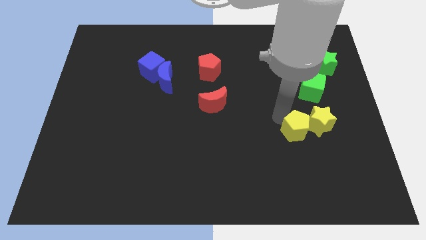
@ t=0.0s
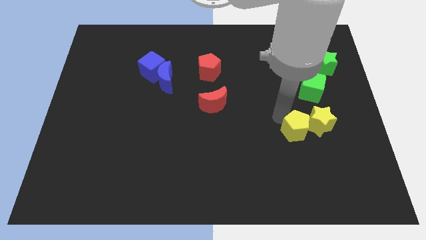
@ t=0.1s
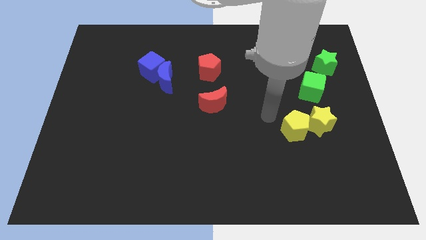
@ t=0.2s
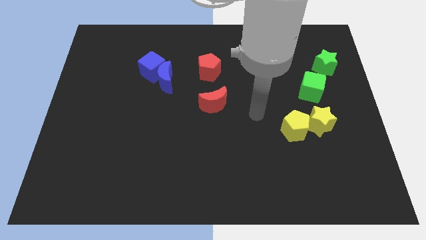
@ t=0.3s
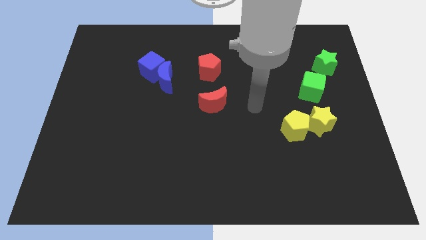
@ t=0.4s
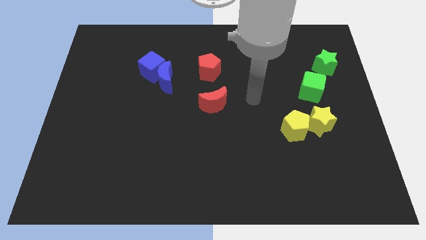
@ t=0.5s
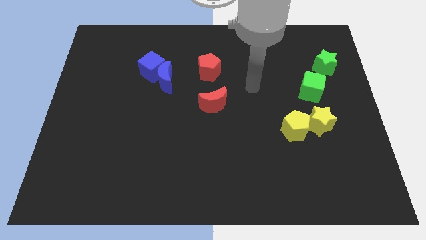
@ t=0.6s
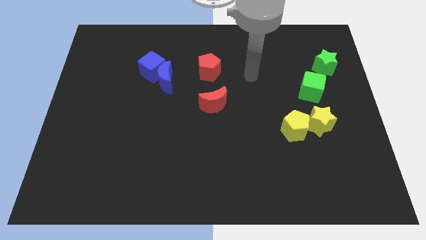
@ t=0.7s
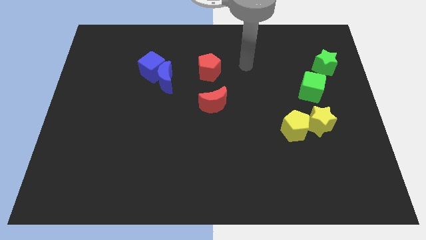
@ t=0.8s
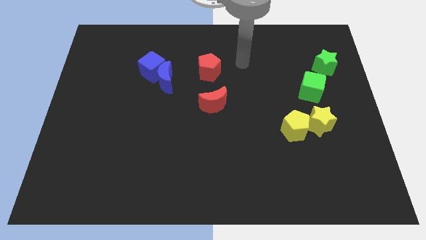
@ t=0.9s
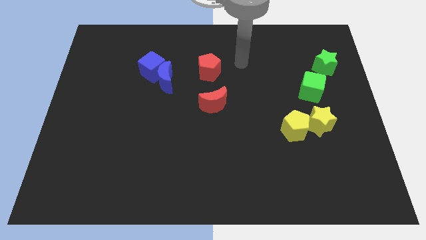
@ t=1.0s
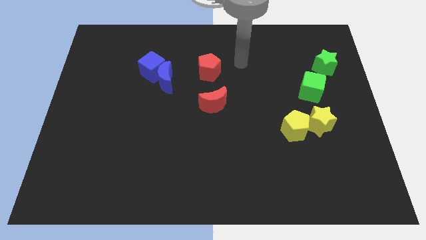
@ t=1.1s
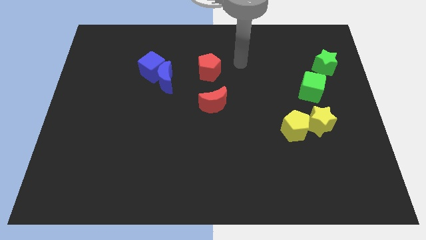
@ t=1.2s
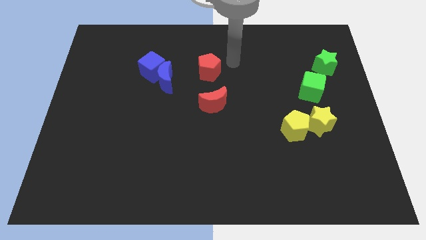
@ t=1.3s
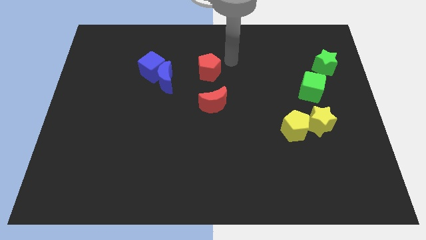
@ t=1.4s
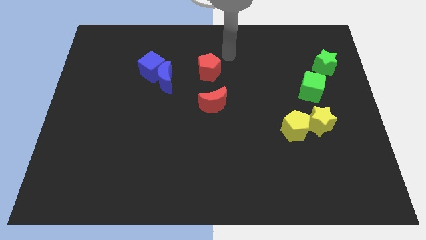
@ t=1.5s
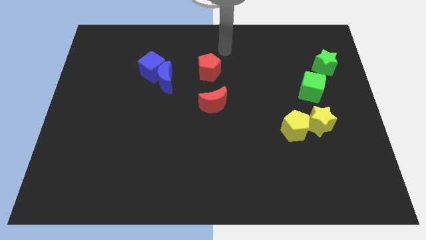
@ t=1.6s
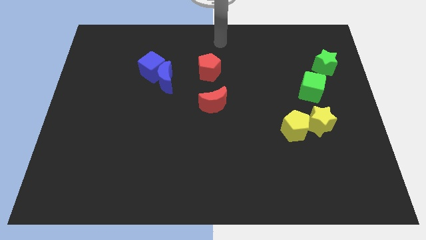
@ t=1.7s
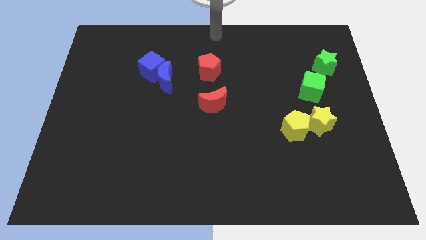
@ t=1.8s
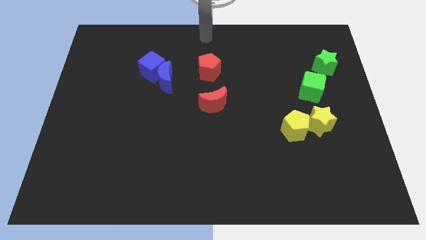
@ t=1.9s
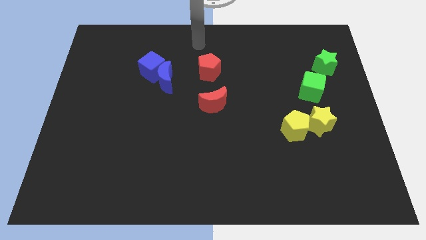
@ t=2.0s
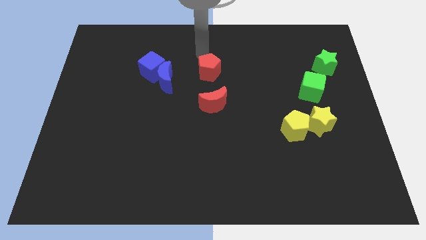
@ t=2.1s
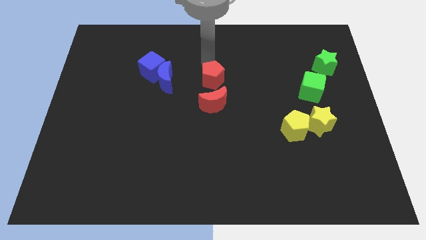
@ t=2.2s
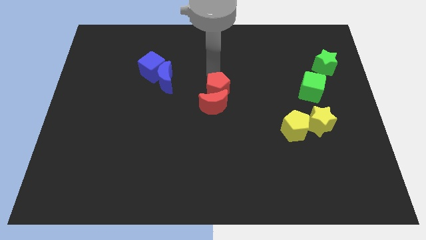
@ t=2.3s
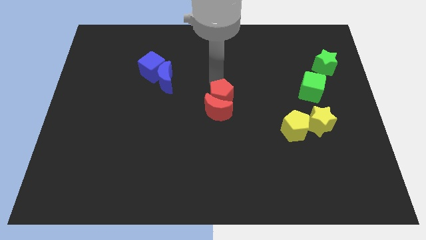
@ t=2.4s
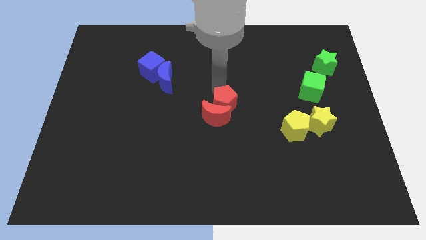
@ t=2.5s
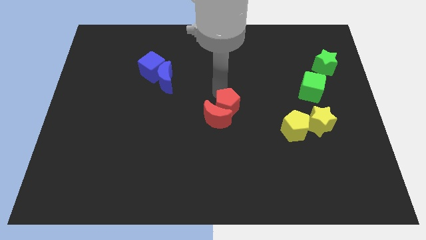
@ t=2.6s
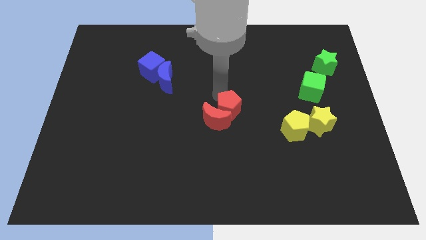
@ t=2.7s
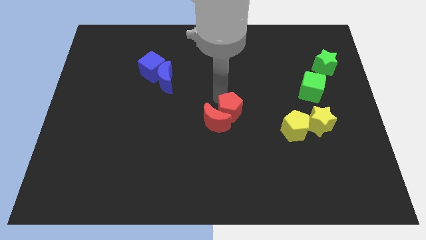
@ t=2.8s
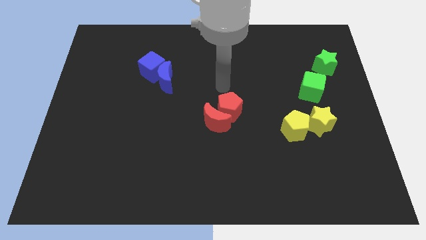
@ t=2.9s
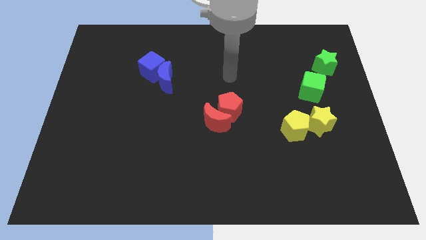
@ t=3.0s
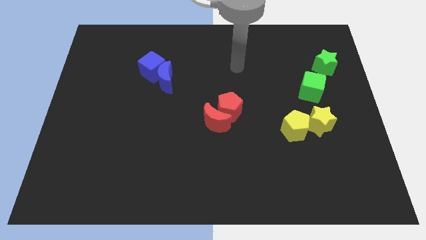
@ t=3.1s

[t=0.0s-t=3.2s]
slide red pentagon into red moon

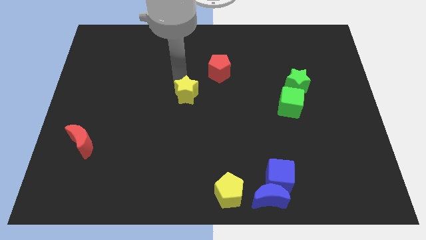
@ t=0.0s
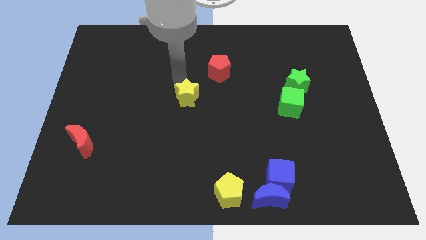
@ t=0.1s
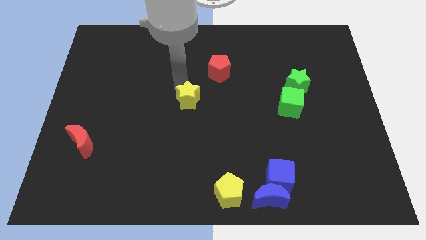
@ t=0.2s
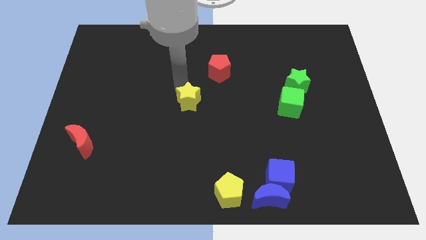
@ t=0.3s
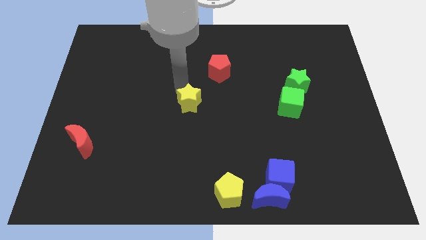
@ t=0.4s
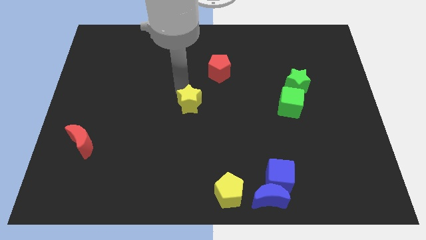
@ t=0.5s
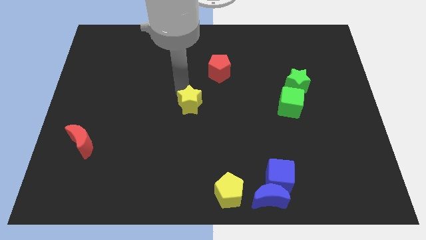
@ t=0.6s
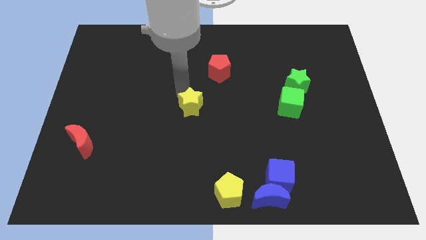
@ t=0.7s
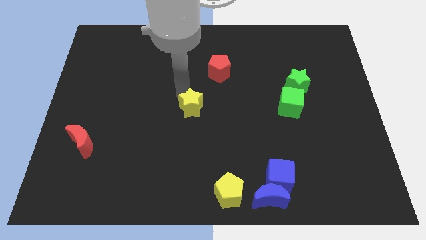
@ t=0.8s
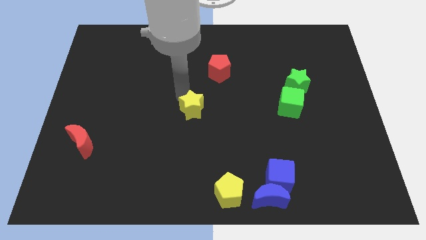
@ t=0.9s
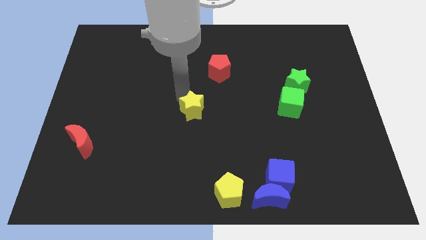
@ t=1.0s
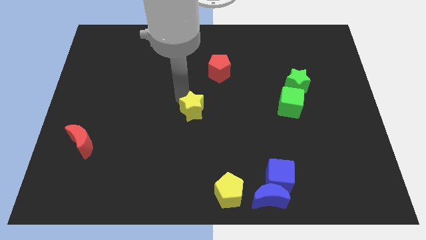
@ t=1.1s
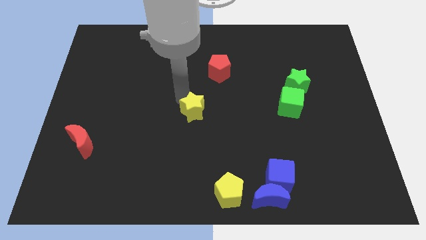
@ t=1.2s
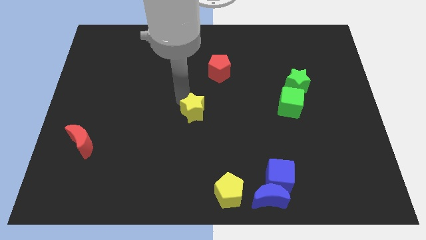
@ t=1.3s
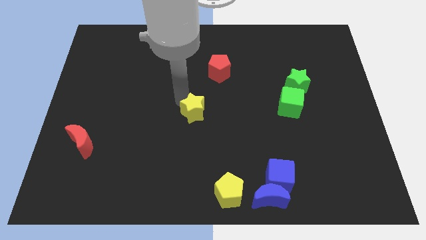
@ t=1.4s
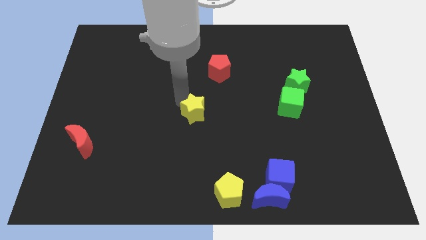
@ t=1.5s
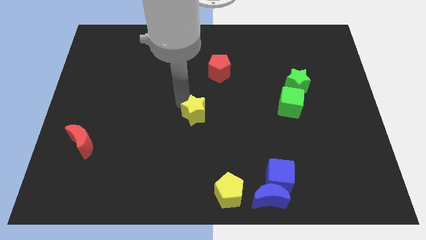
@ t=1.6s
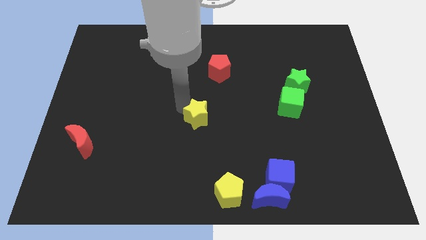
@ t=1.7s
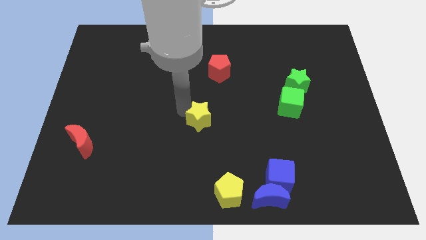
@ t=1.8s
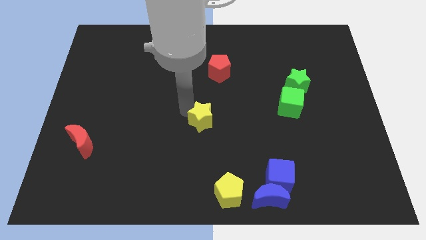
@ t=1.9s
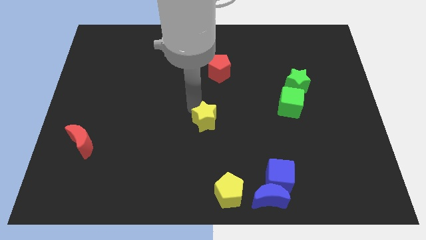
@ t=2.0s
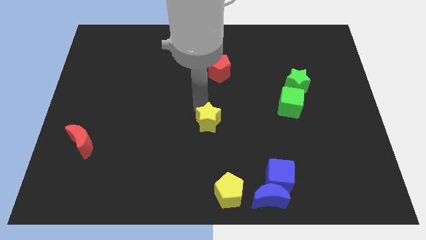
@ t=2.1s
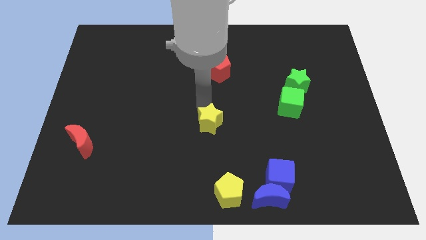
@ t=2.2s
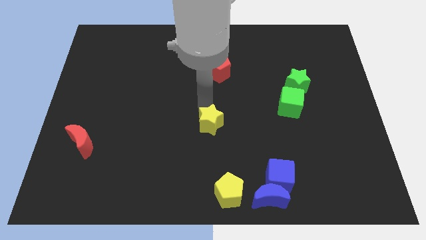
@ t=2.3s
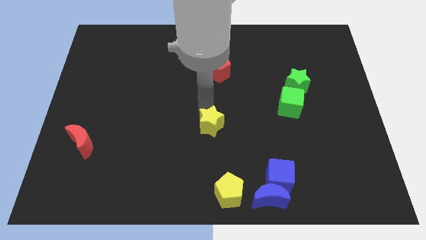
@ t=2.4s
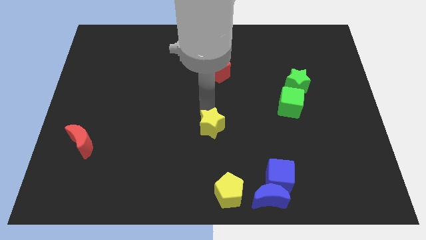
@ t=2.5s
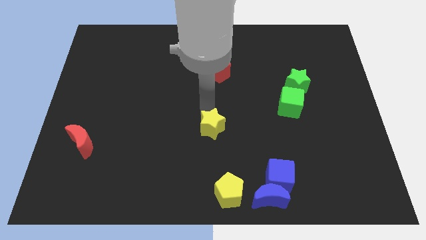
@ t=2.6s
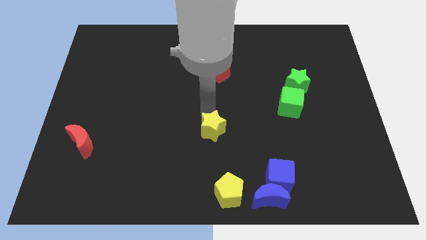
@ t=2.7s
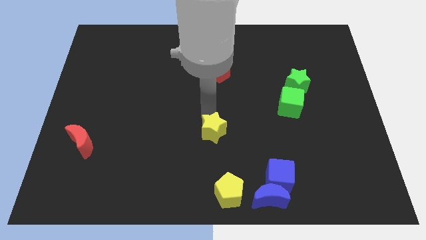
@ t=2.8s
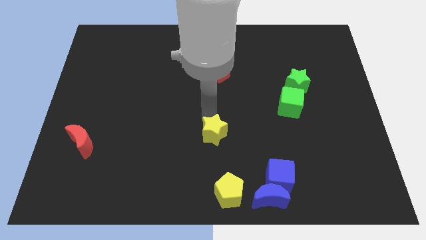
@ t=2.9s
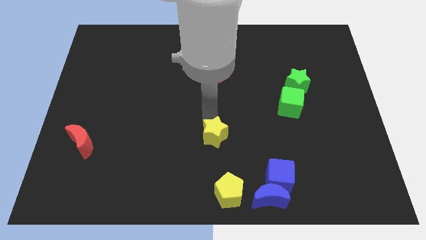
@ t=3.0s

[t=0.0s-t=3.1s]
push the yellow star towards the yellow pentagon

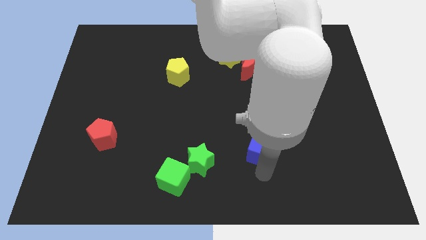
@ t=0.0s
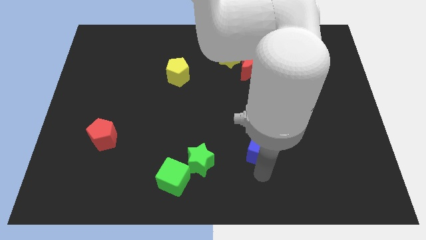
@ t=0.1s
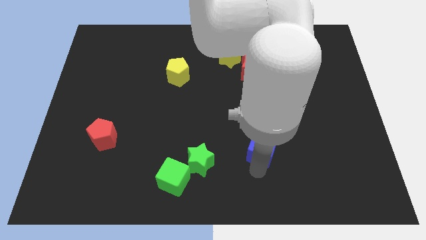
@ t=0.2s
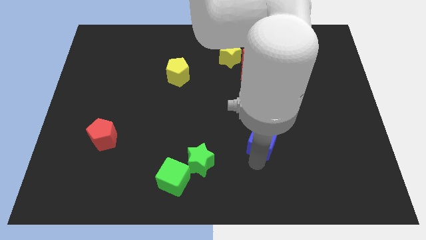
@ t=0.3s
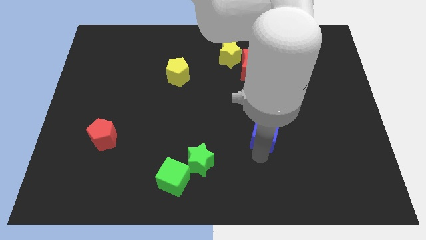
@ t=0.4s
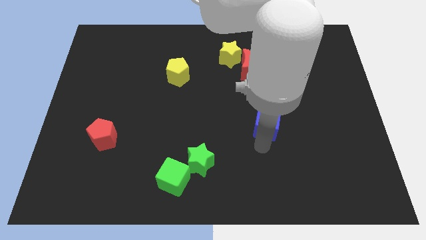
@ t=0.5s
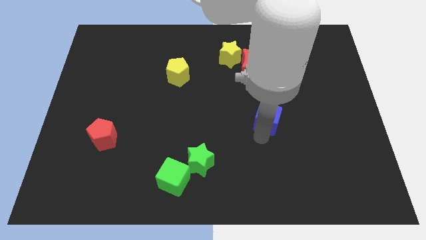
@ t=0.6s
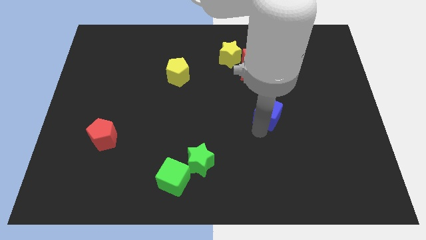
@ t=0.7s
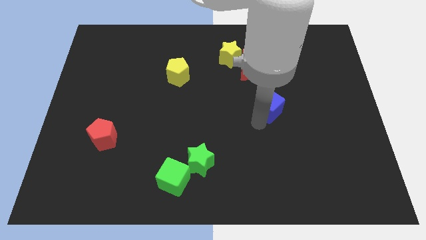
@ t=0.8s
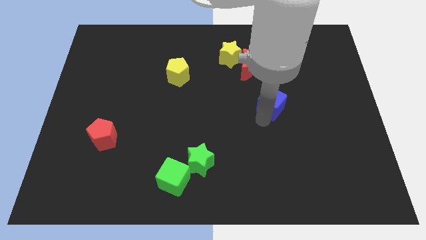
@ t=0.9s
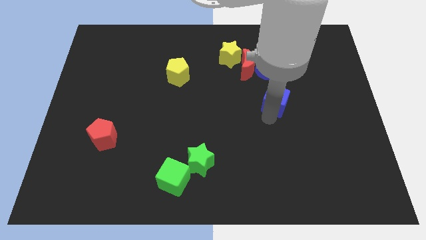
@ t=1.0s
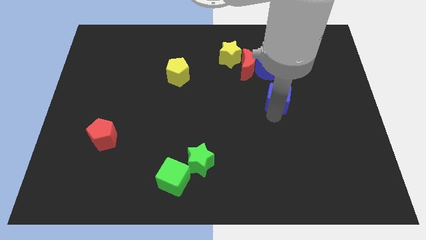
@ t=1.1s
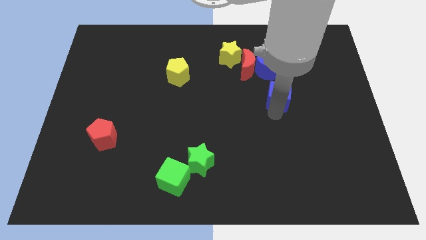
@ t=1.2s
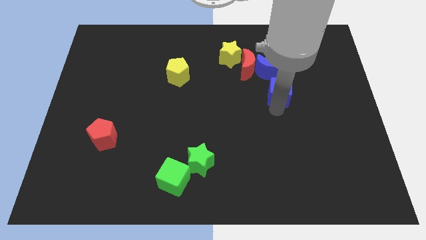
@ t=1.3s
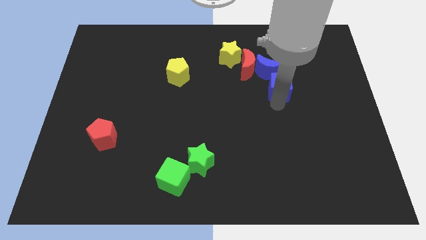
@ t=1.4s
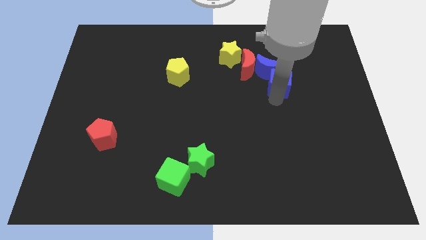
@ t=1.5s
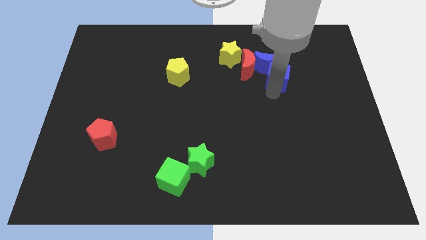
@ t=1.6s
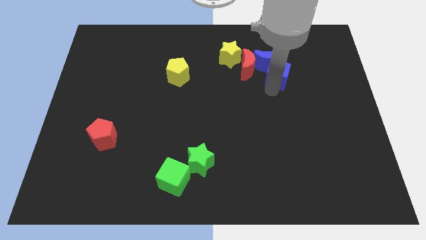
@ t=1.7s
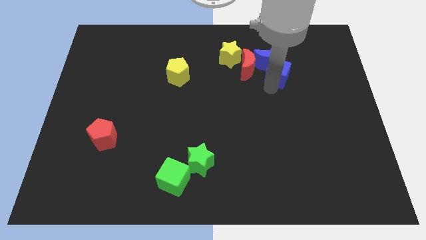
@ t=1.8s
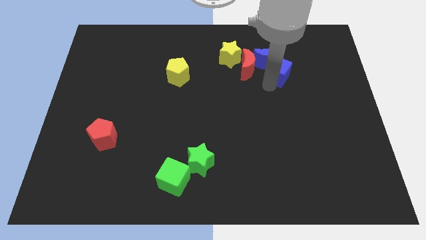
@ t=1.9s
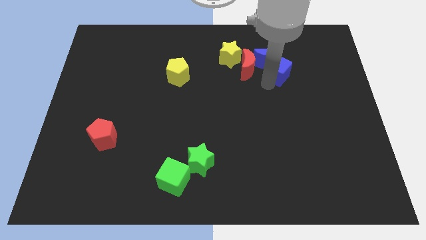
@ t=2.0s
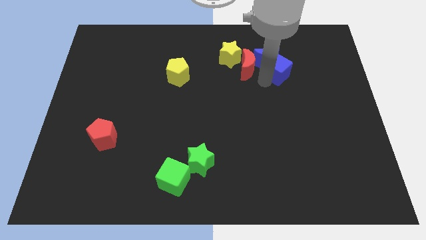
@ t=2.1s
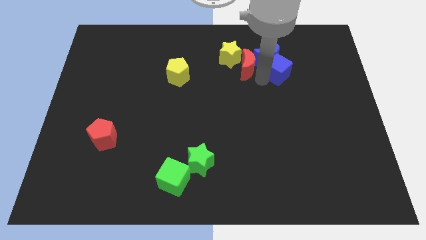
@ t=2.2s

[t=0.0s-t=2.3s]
push the blue cube to the right of the red crescent

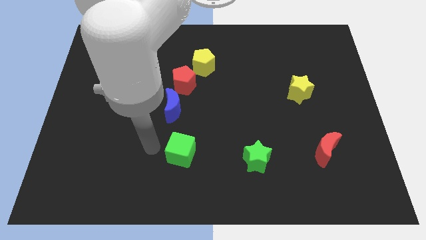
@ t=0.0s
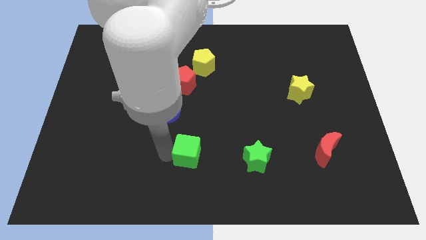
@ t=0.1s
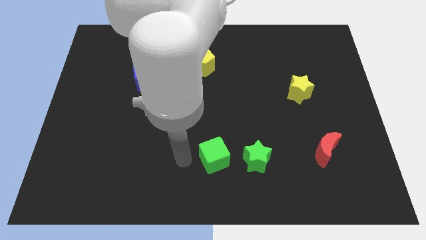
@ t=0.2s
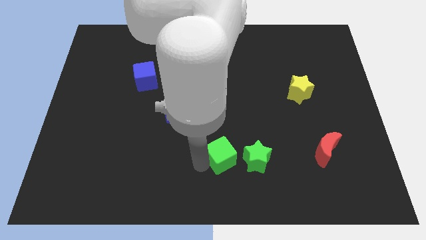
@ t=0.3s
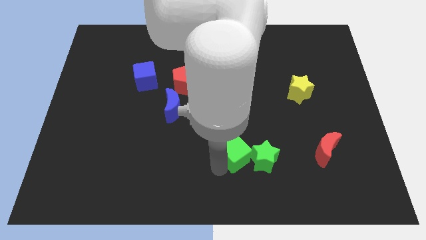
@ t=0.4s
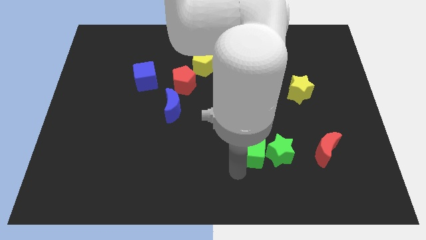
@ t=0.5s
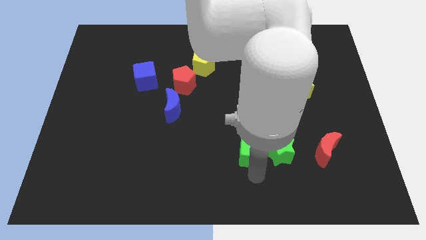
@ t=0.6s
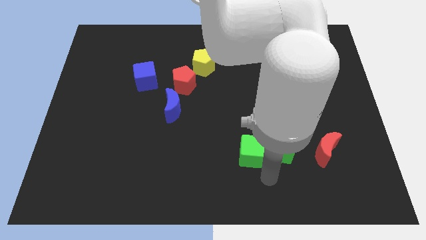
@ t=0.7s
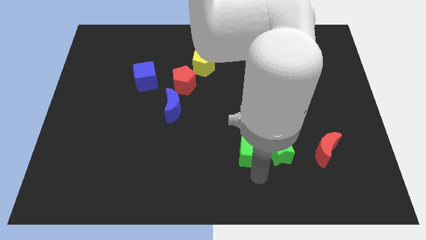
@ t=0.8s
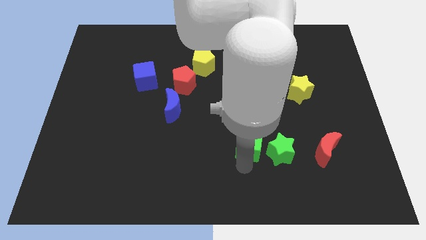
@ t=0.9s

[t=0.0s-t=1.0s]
move the green cube left to the green star
